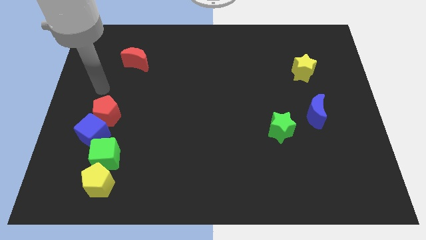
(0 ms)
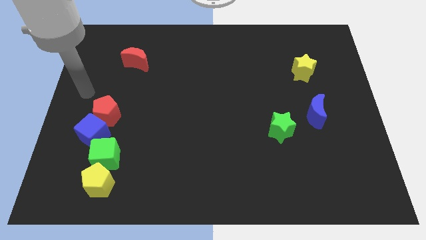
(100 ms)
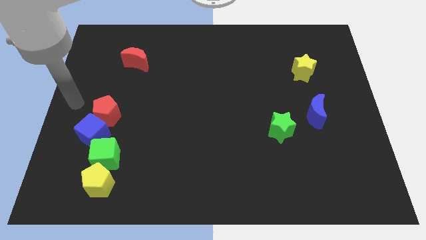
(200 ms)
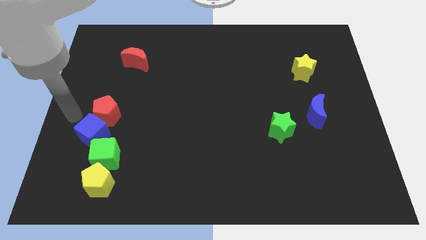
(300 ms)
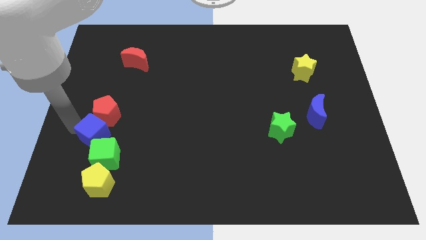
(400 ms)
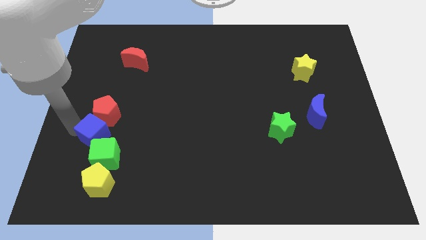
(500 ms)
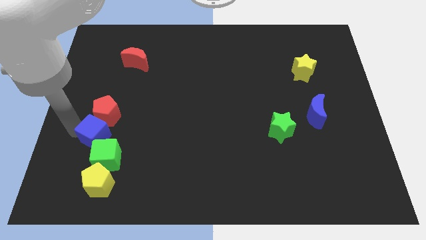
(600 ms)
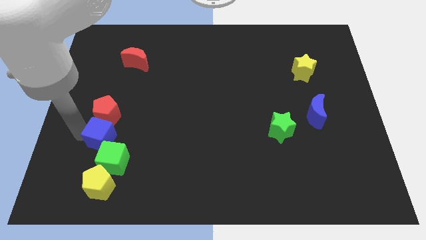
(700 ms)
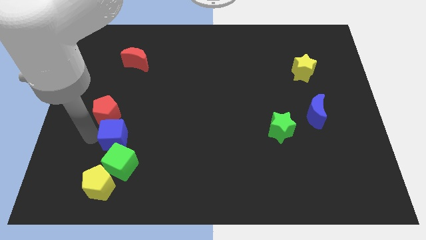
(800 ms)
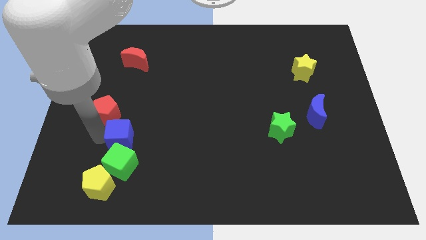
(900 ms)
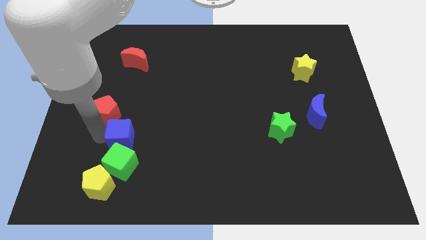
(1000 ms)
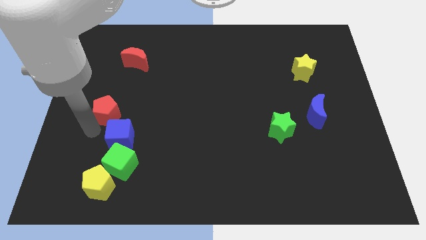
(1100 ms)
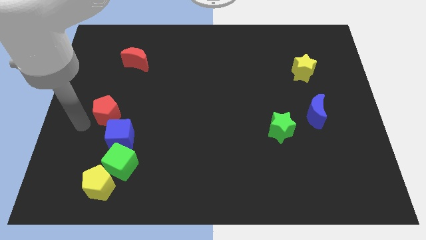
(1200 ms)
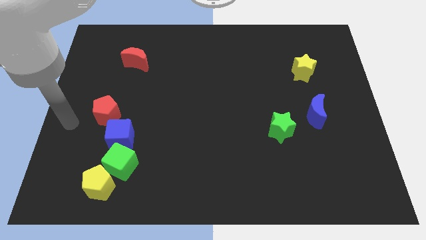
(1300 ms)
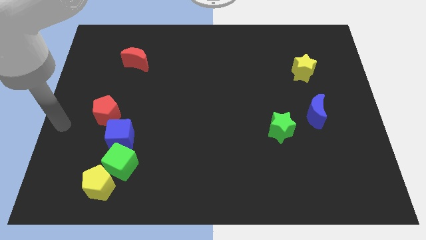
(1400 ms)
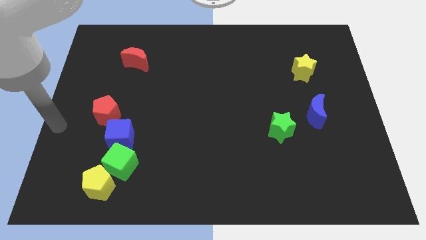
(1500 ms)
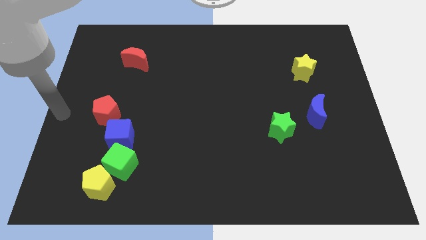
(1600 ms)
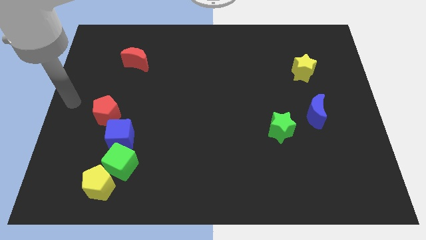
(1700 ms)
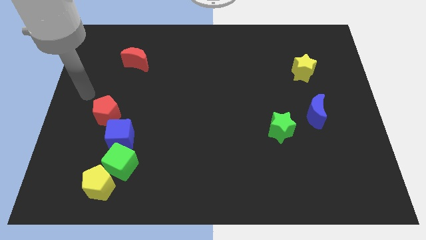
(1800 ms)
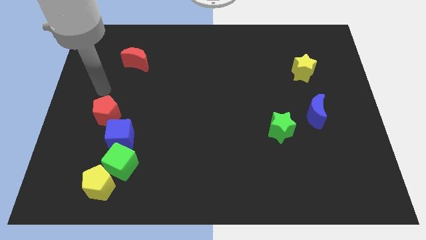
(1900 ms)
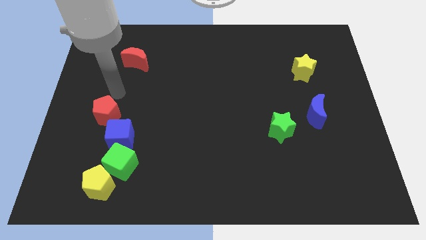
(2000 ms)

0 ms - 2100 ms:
move the blue cube to the bottom right side of the red pentagon

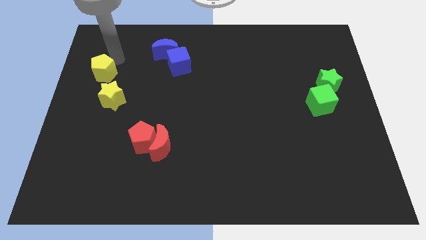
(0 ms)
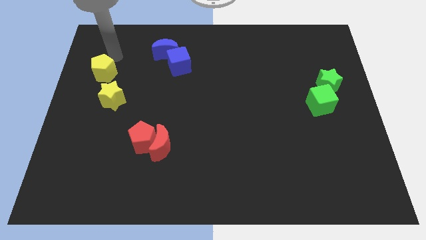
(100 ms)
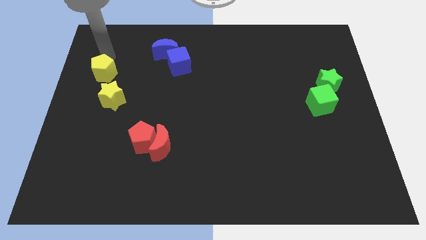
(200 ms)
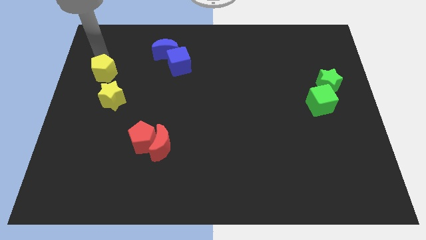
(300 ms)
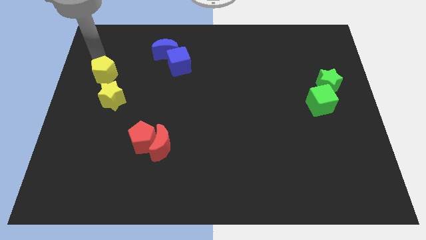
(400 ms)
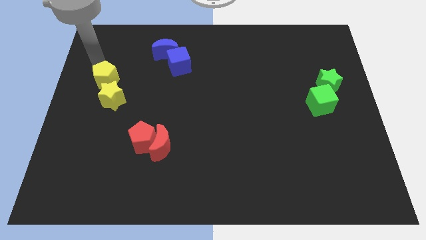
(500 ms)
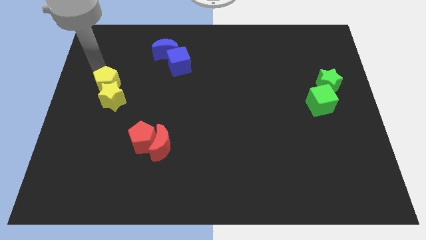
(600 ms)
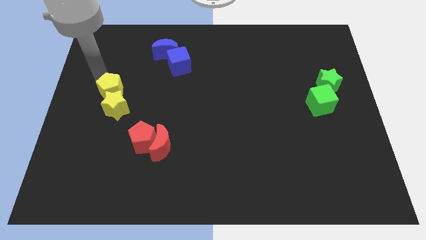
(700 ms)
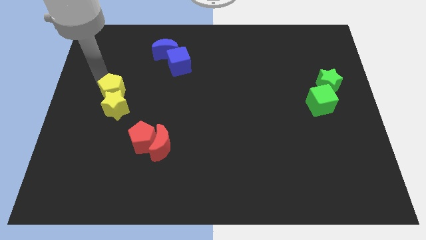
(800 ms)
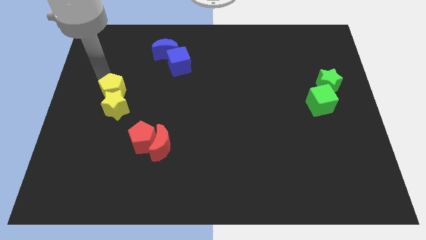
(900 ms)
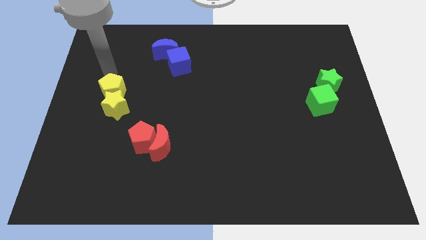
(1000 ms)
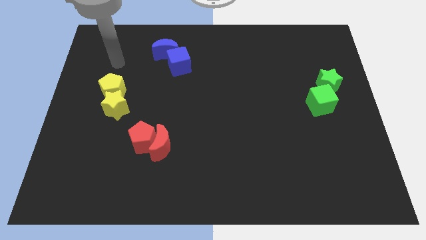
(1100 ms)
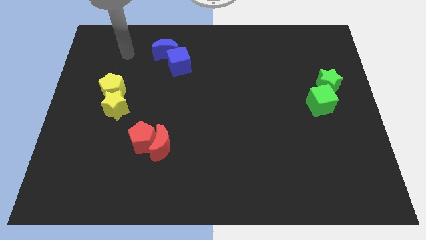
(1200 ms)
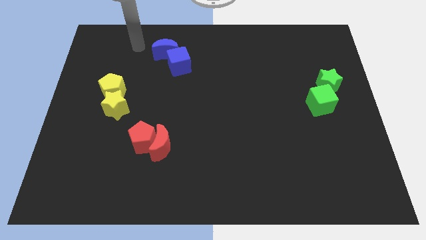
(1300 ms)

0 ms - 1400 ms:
push the yellow pentagon into the yellow star

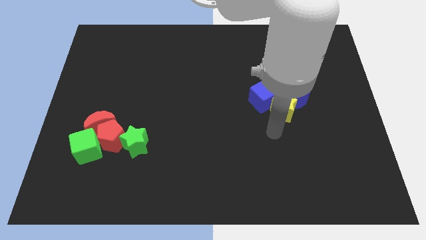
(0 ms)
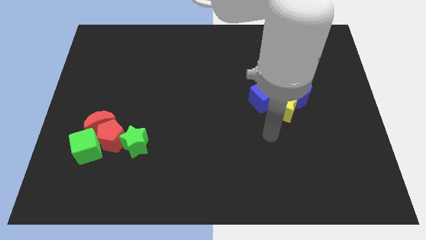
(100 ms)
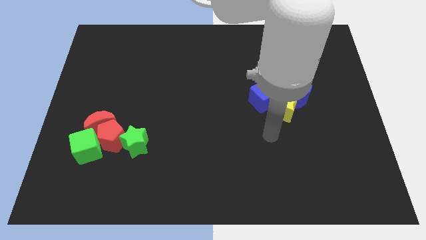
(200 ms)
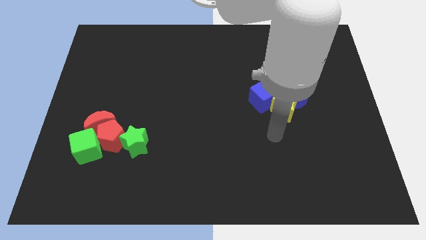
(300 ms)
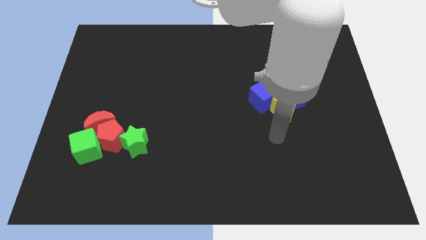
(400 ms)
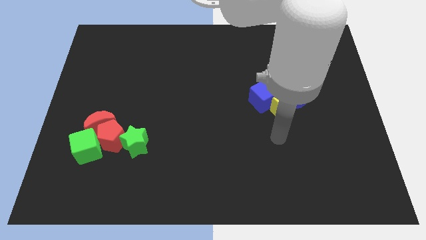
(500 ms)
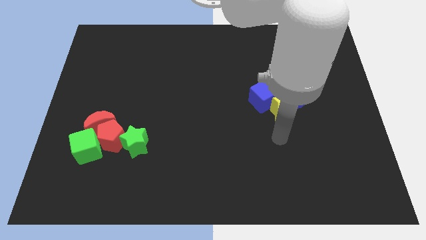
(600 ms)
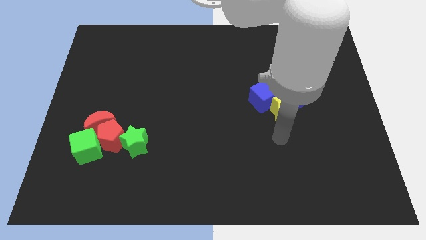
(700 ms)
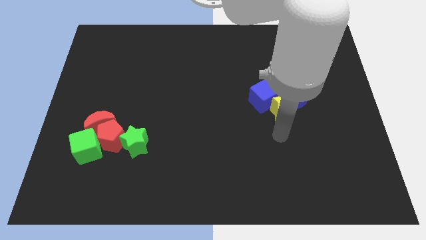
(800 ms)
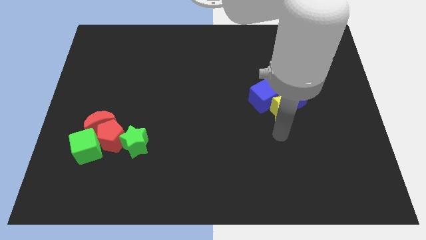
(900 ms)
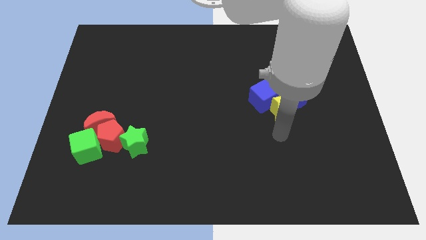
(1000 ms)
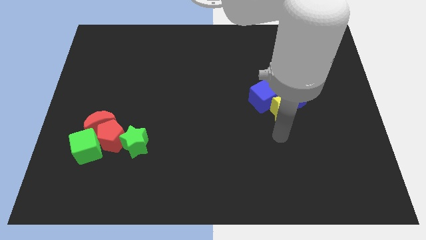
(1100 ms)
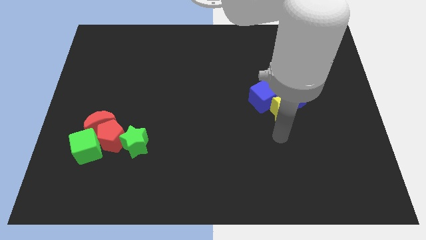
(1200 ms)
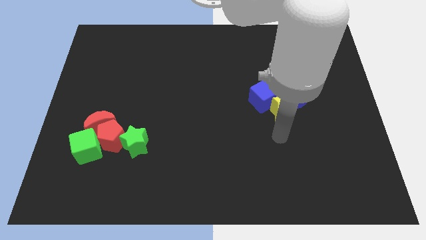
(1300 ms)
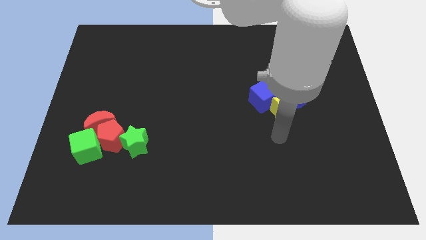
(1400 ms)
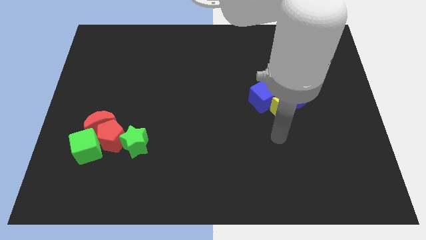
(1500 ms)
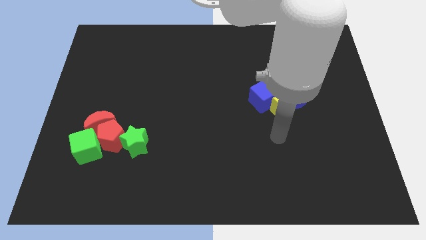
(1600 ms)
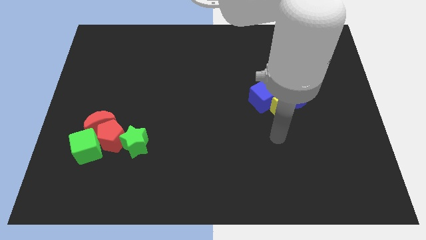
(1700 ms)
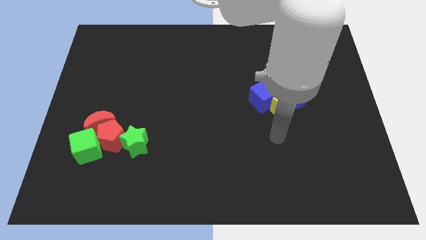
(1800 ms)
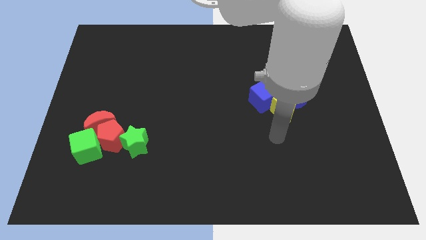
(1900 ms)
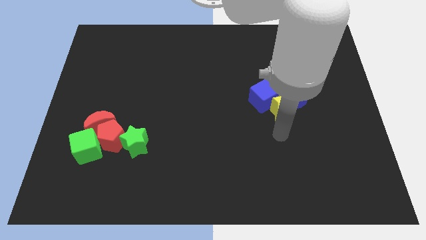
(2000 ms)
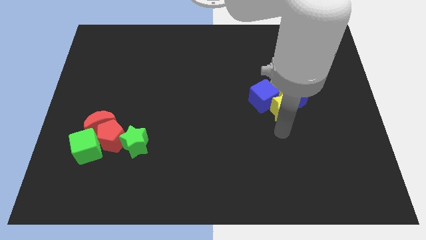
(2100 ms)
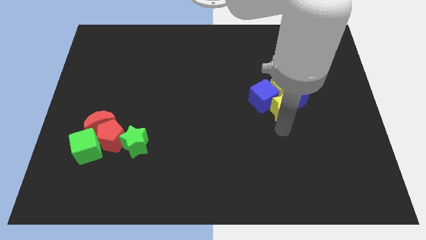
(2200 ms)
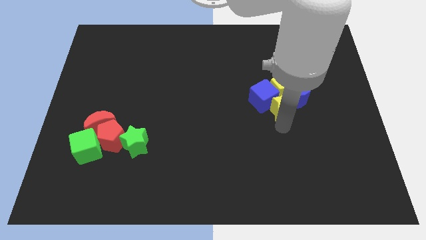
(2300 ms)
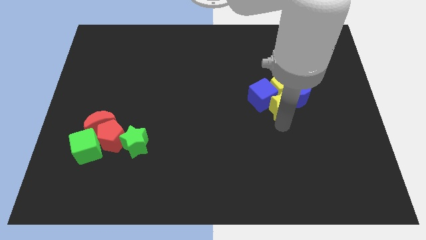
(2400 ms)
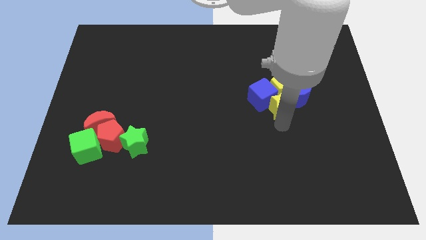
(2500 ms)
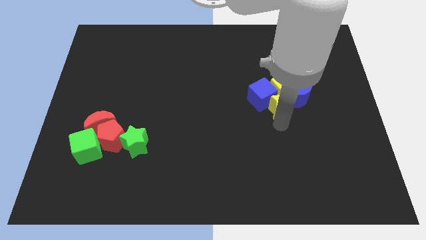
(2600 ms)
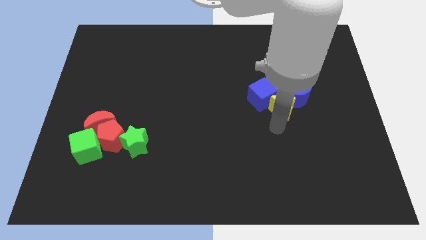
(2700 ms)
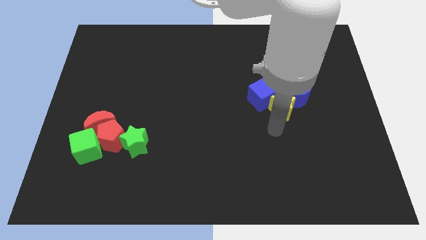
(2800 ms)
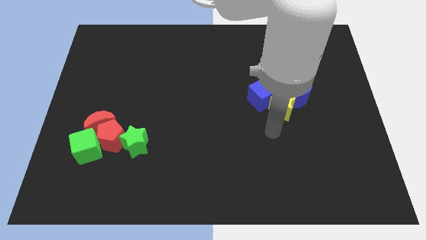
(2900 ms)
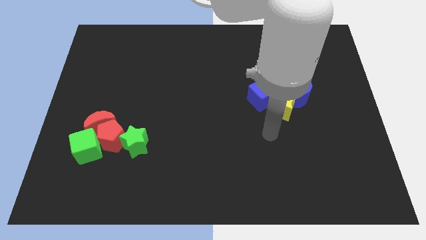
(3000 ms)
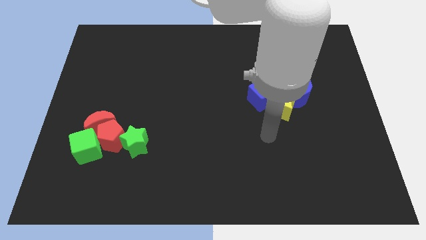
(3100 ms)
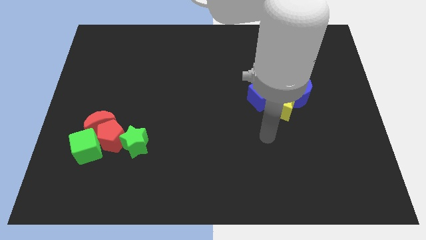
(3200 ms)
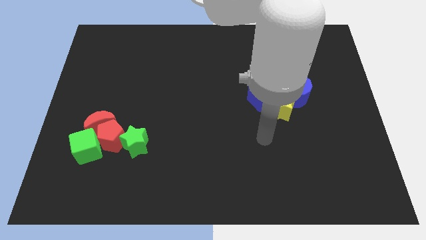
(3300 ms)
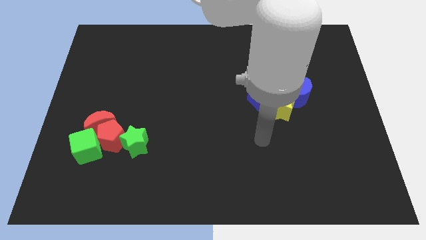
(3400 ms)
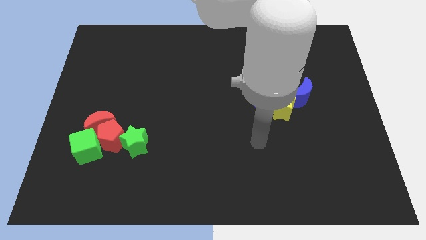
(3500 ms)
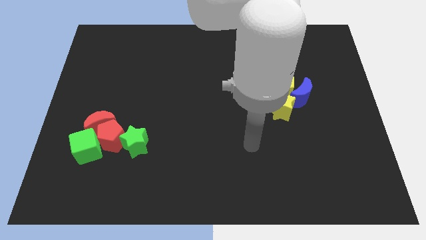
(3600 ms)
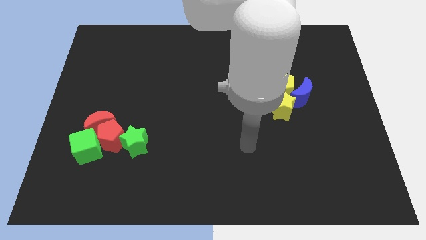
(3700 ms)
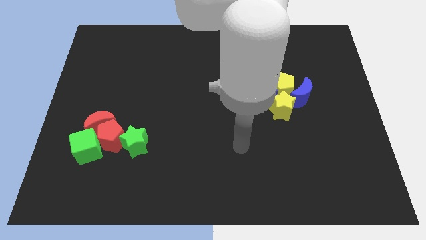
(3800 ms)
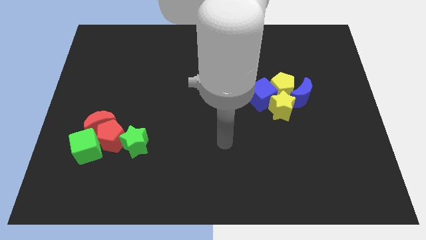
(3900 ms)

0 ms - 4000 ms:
place the yellow star below yellow pentagon

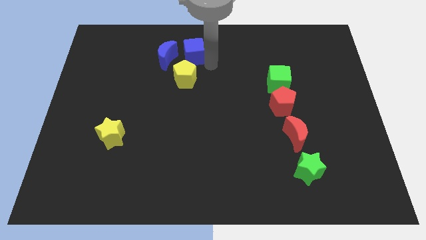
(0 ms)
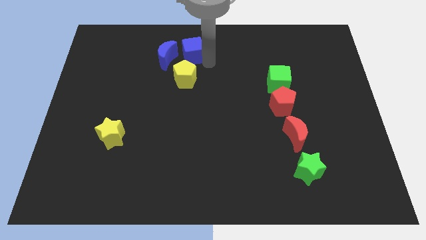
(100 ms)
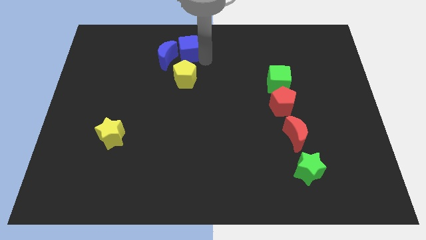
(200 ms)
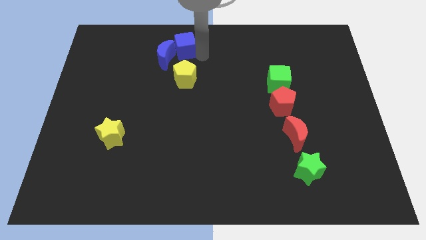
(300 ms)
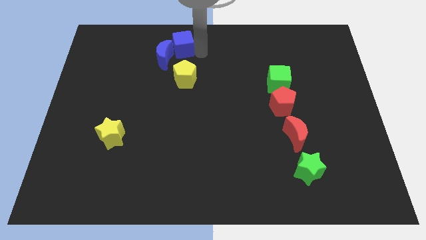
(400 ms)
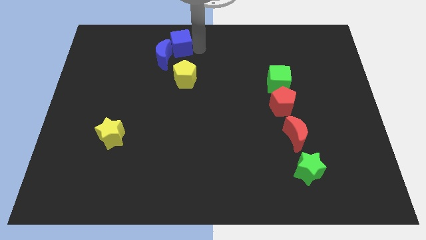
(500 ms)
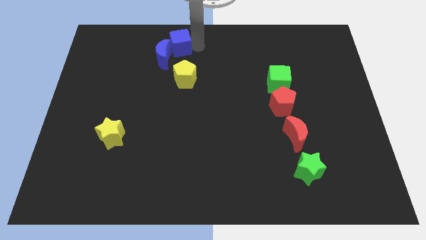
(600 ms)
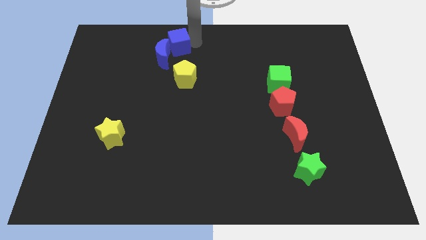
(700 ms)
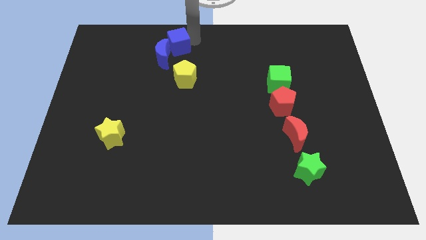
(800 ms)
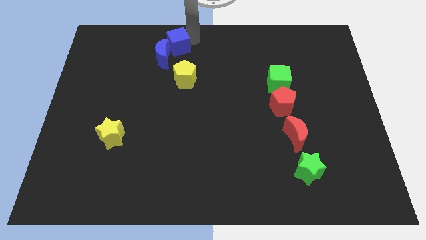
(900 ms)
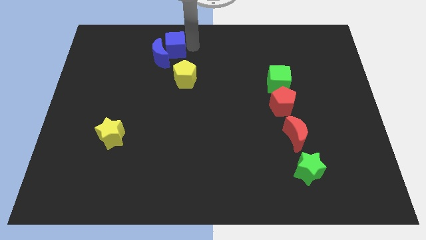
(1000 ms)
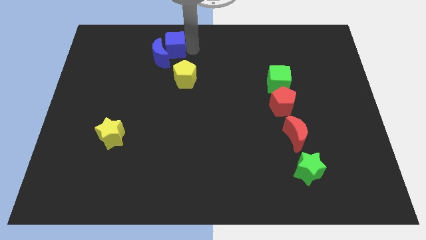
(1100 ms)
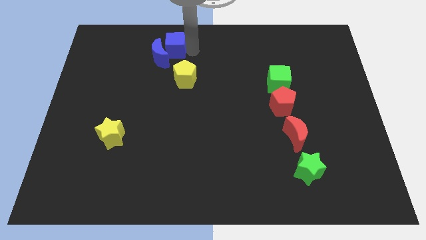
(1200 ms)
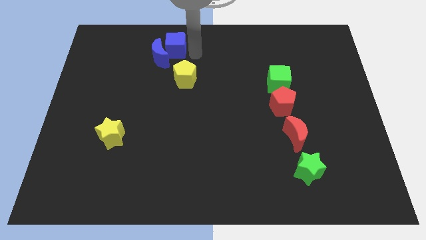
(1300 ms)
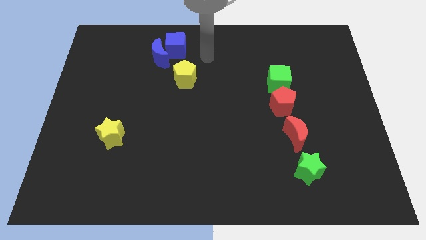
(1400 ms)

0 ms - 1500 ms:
push blue cube to the right of the blue crescent

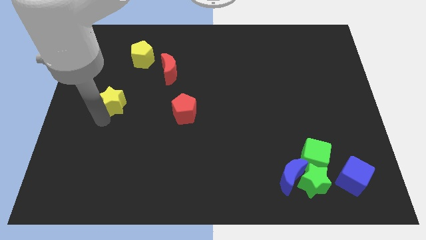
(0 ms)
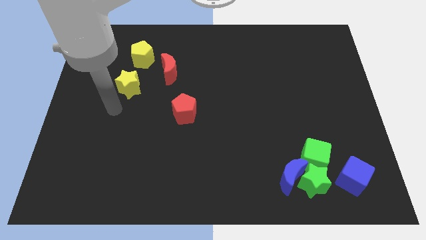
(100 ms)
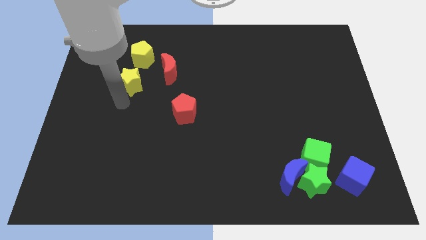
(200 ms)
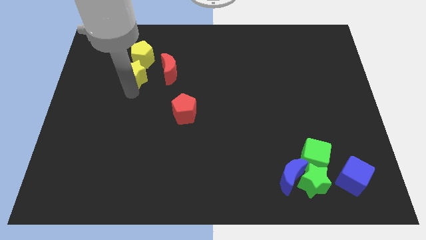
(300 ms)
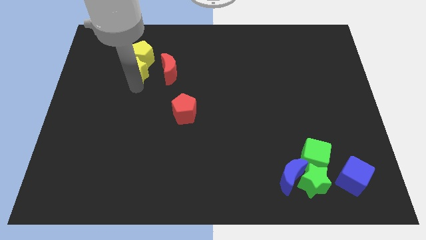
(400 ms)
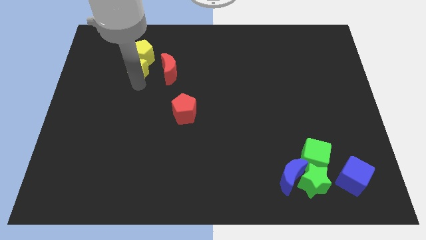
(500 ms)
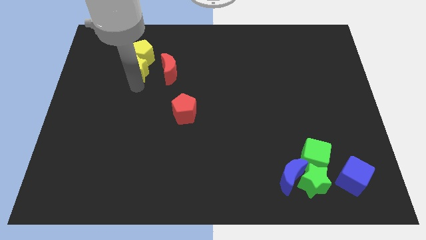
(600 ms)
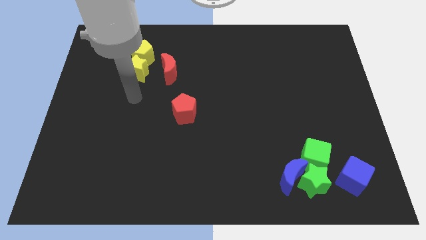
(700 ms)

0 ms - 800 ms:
push the yellow star into the yellow pentagon
